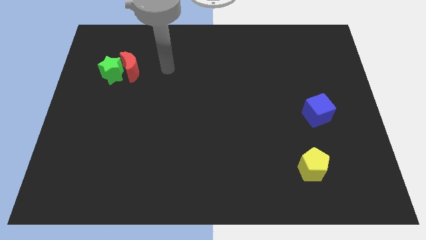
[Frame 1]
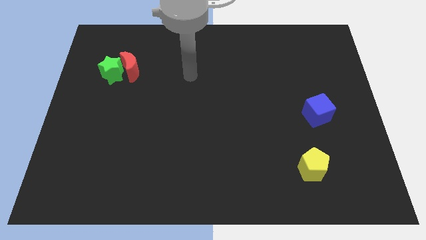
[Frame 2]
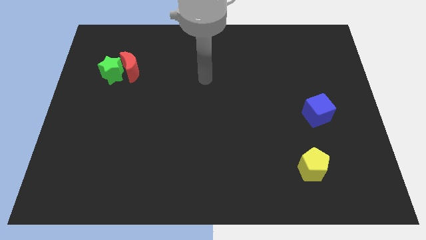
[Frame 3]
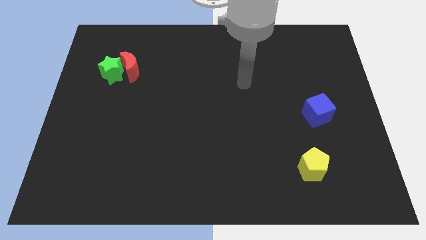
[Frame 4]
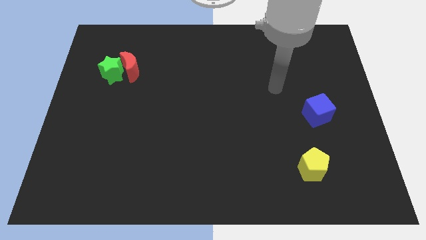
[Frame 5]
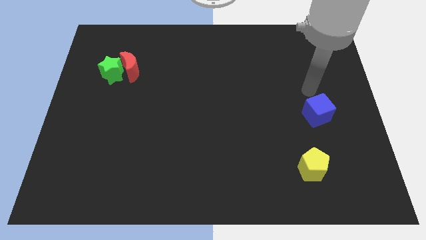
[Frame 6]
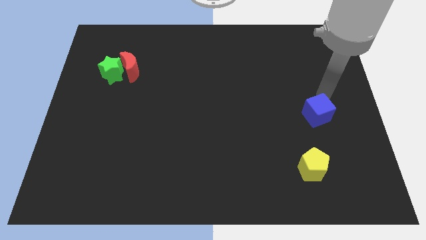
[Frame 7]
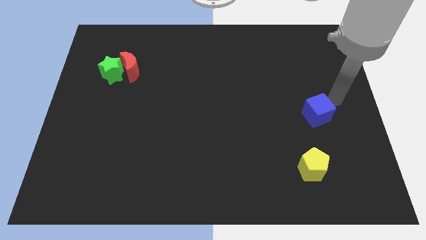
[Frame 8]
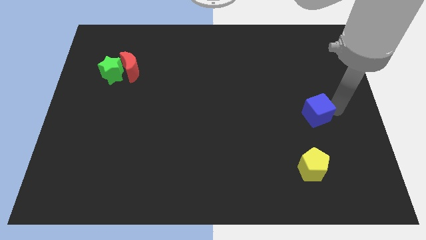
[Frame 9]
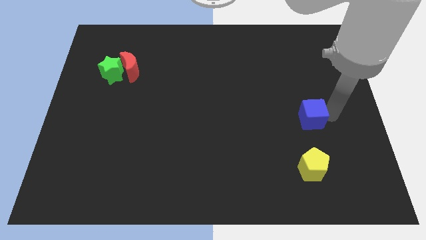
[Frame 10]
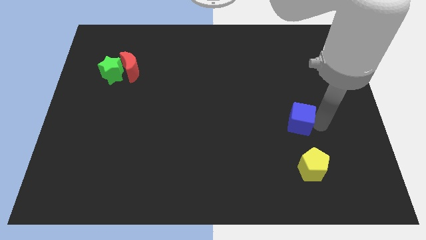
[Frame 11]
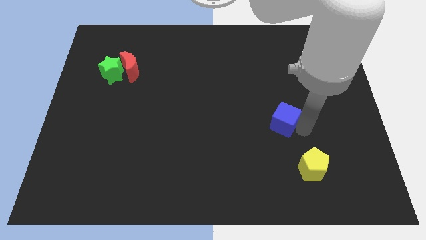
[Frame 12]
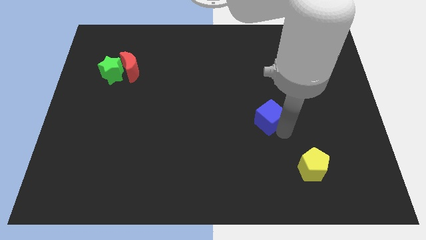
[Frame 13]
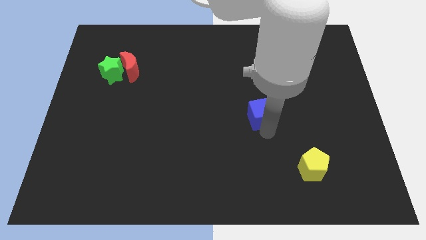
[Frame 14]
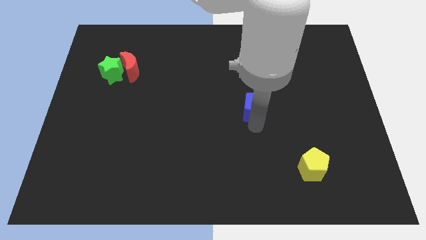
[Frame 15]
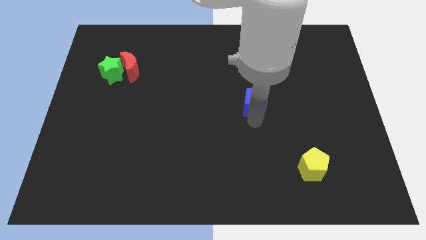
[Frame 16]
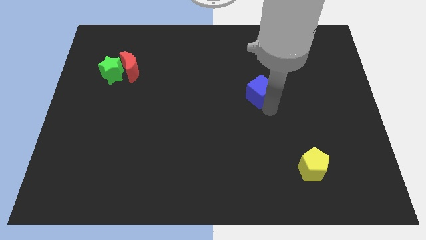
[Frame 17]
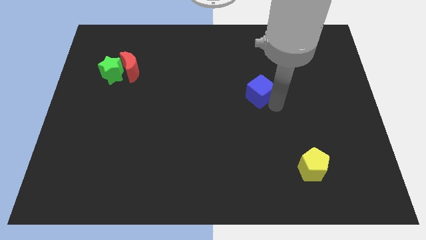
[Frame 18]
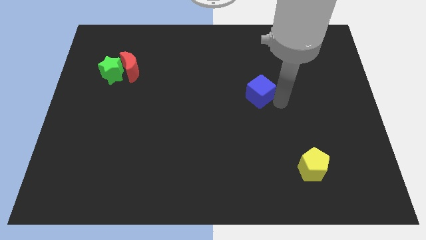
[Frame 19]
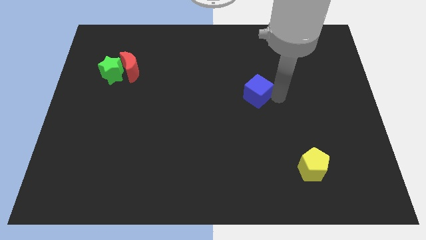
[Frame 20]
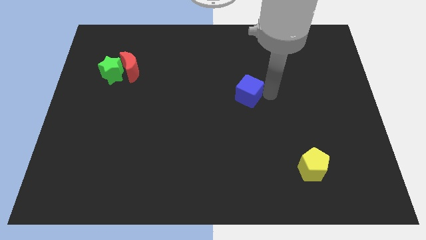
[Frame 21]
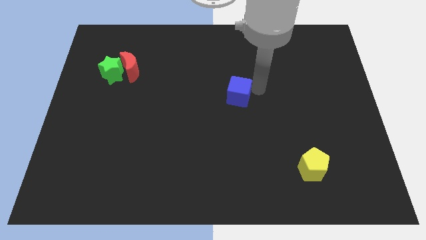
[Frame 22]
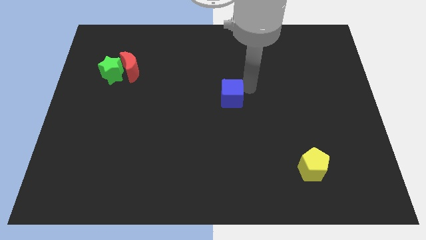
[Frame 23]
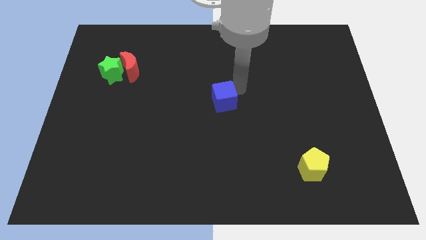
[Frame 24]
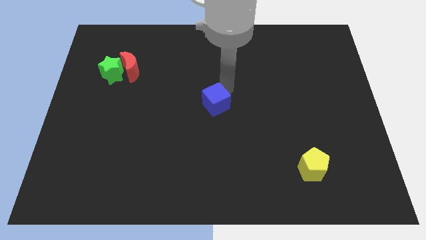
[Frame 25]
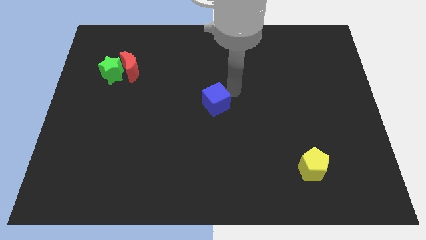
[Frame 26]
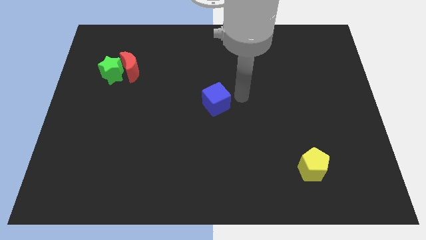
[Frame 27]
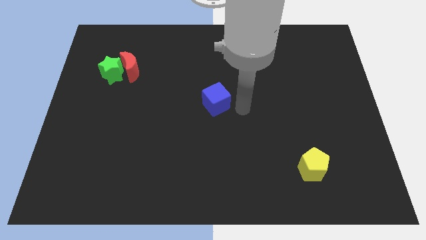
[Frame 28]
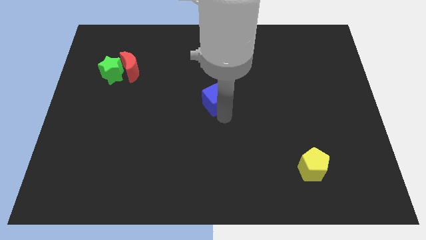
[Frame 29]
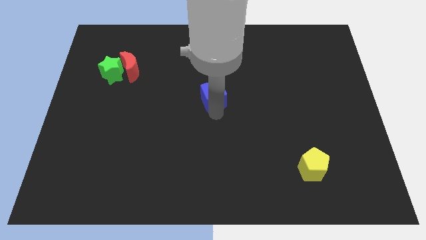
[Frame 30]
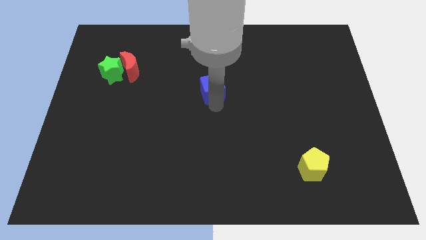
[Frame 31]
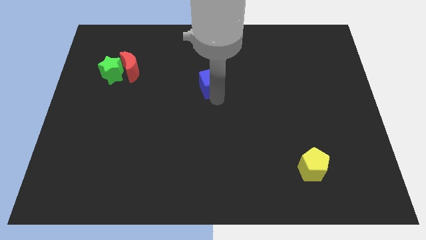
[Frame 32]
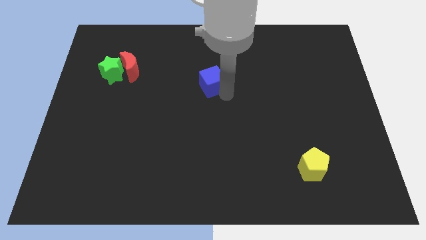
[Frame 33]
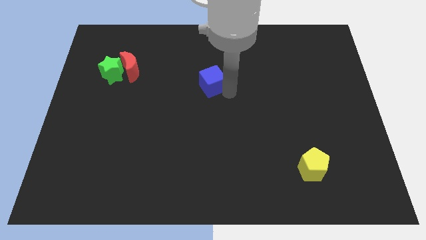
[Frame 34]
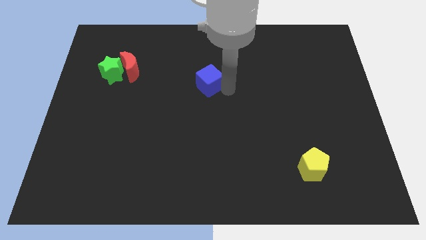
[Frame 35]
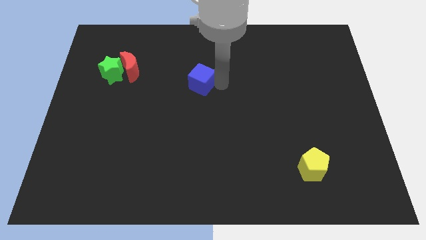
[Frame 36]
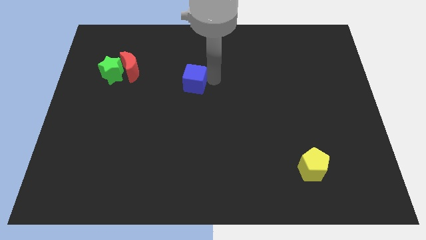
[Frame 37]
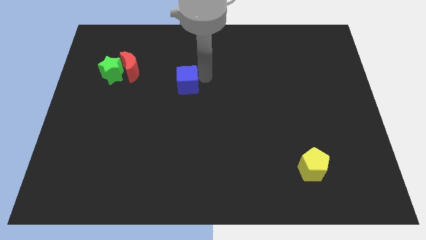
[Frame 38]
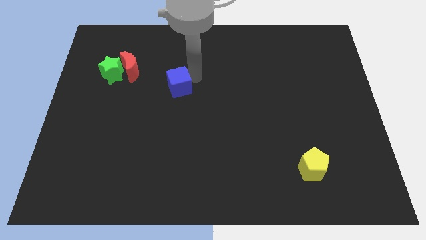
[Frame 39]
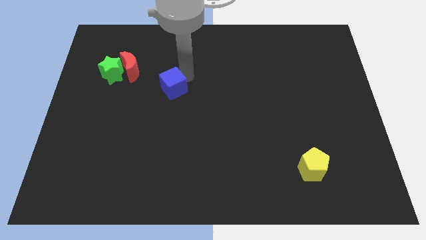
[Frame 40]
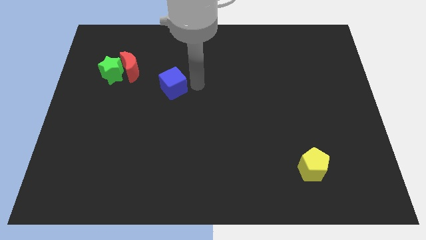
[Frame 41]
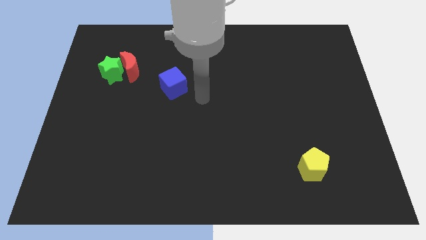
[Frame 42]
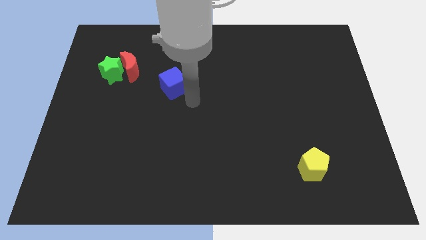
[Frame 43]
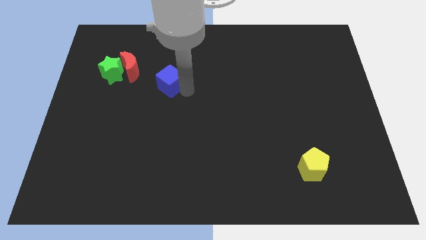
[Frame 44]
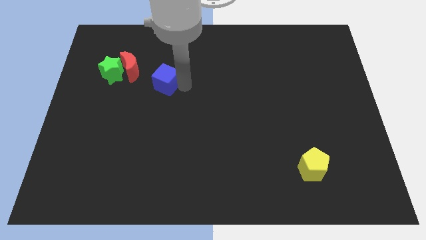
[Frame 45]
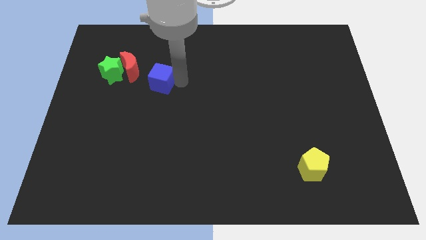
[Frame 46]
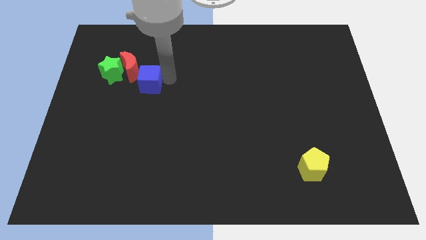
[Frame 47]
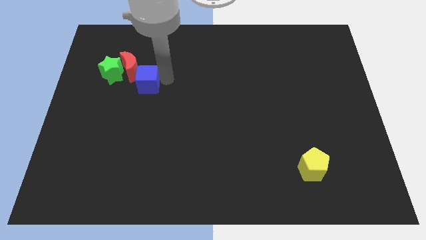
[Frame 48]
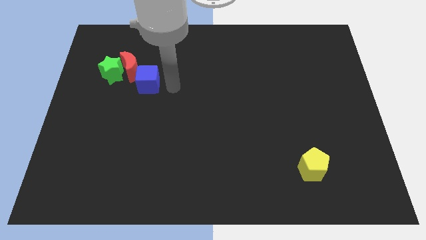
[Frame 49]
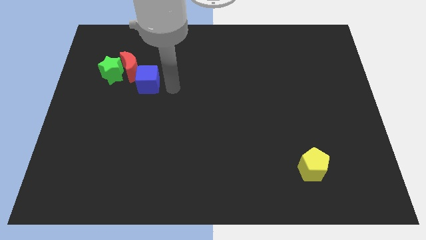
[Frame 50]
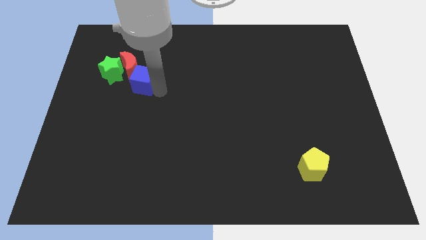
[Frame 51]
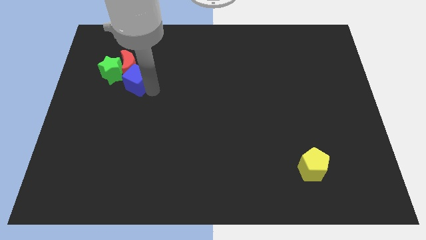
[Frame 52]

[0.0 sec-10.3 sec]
put the blue block close to the moon

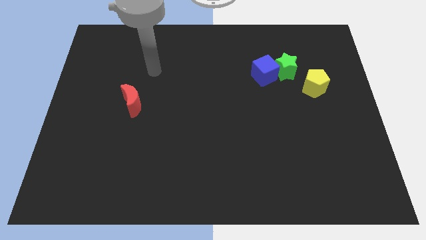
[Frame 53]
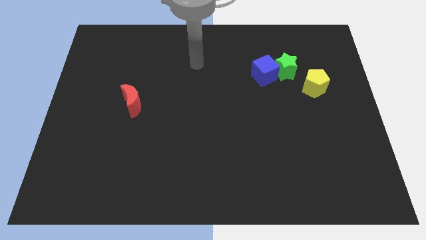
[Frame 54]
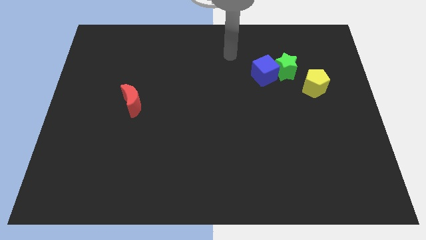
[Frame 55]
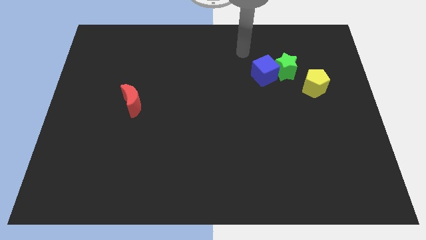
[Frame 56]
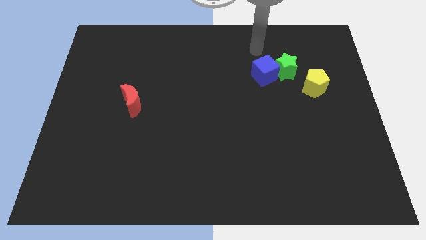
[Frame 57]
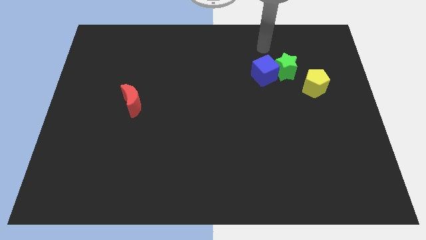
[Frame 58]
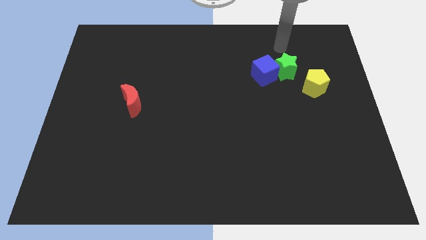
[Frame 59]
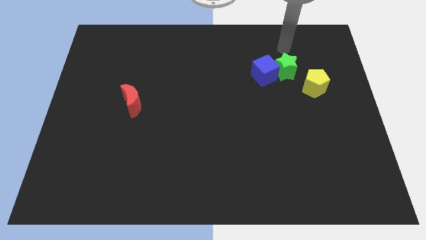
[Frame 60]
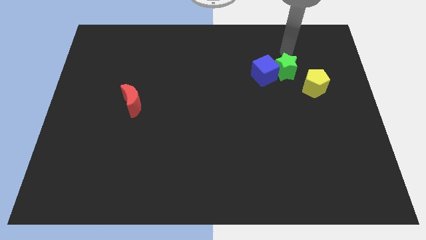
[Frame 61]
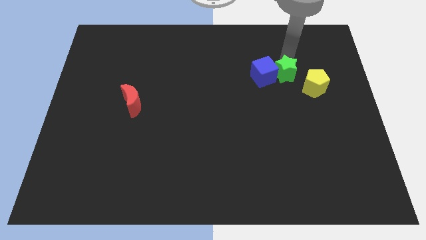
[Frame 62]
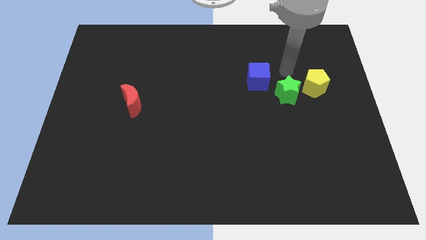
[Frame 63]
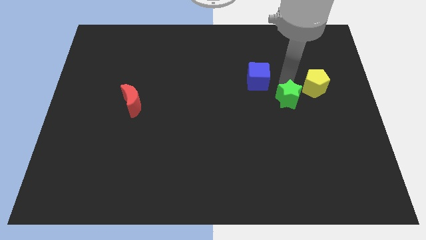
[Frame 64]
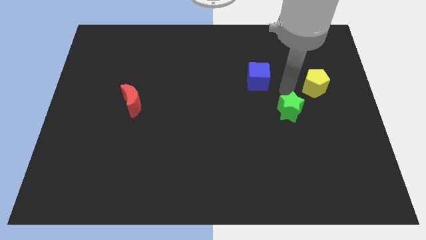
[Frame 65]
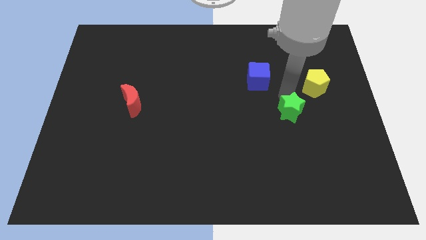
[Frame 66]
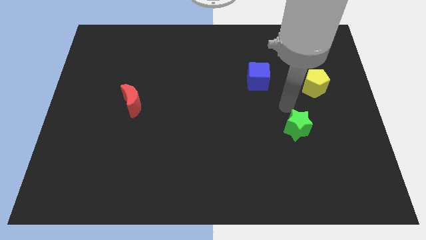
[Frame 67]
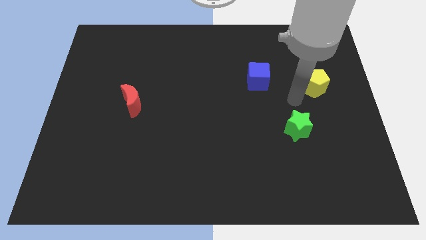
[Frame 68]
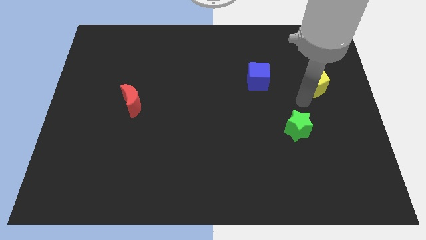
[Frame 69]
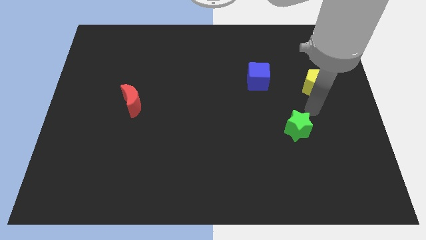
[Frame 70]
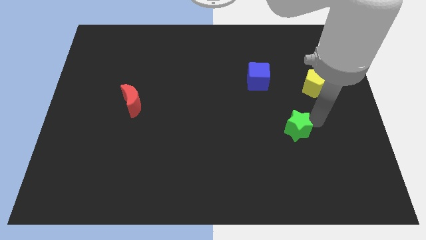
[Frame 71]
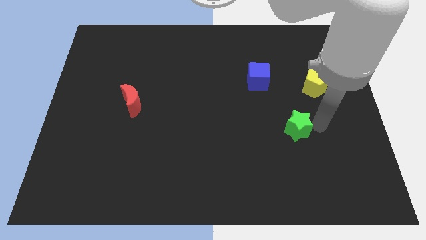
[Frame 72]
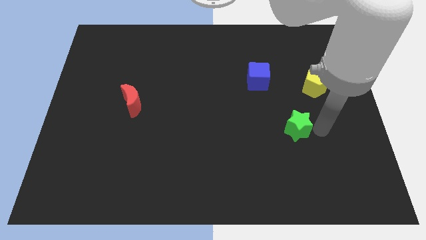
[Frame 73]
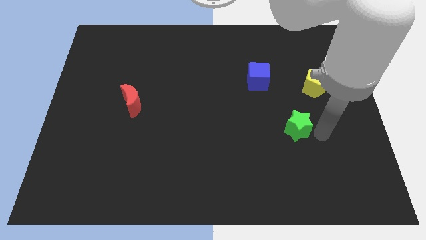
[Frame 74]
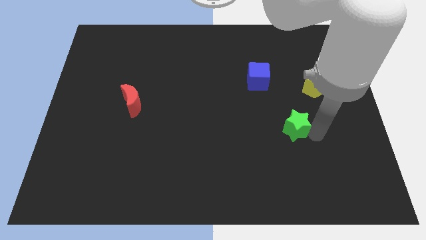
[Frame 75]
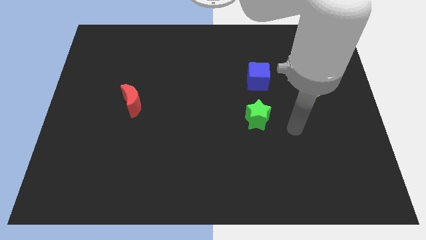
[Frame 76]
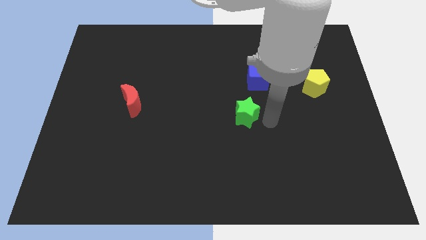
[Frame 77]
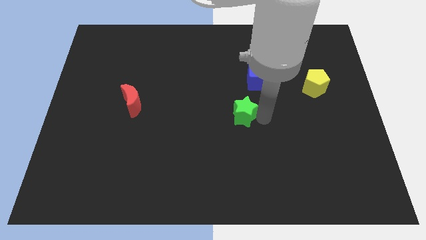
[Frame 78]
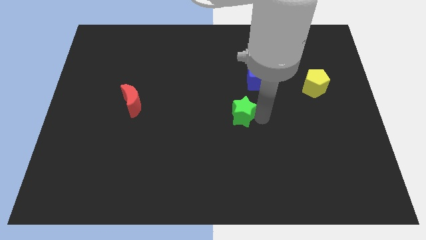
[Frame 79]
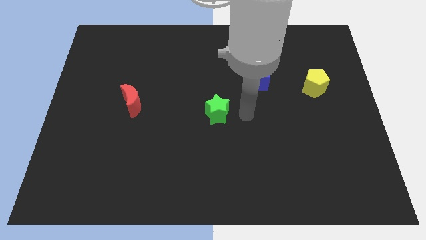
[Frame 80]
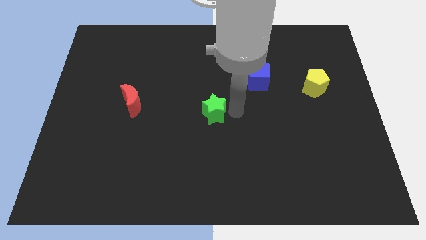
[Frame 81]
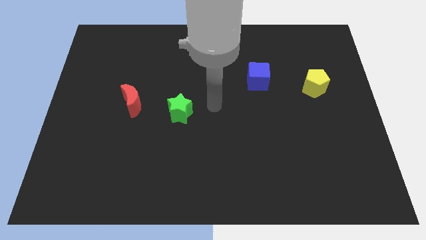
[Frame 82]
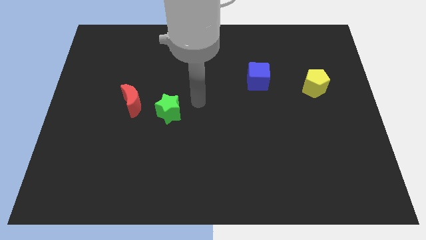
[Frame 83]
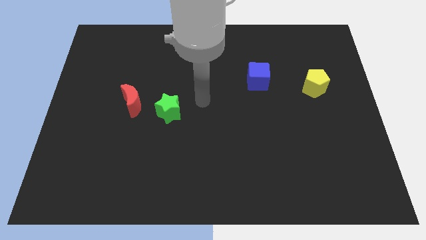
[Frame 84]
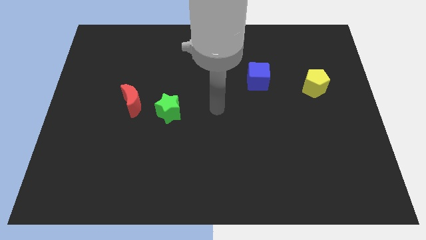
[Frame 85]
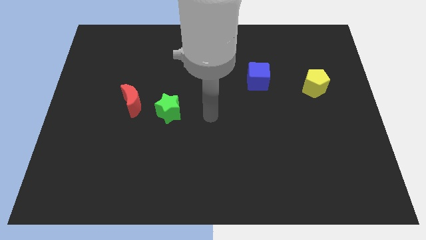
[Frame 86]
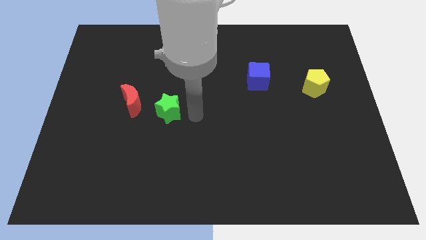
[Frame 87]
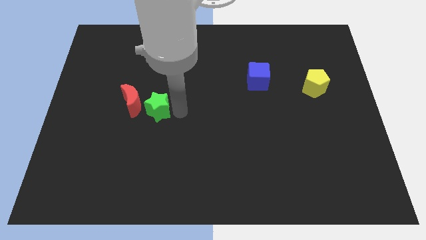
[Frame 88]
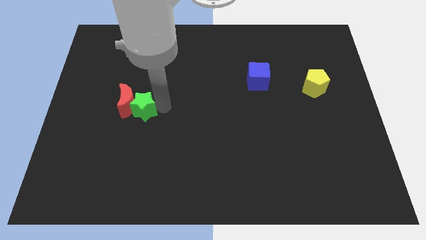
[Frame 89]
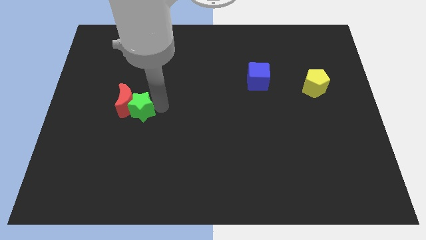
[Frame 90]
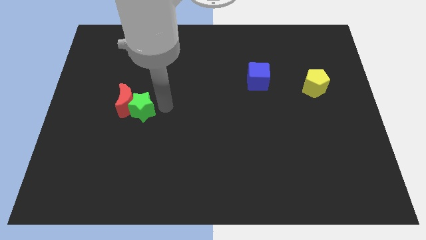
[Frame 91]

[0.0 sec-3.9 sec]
slide the green block to the moon
